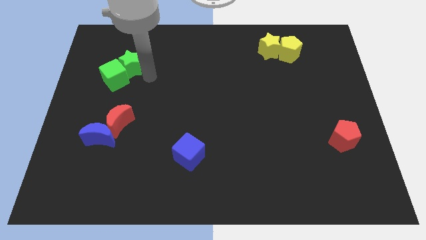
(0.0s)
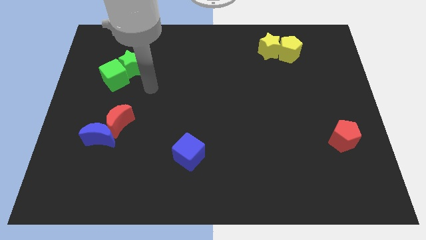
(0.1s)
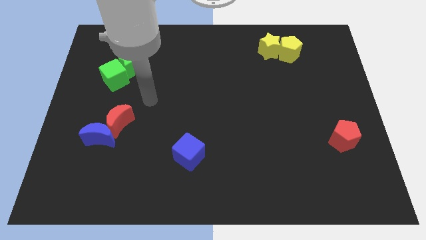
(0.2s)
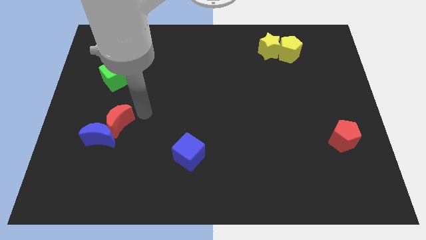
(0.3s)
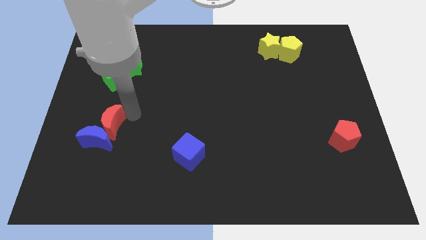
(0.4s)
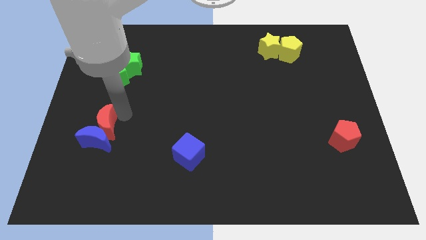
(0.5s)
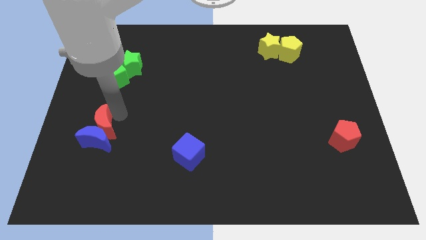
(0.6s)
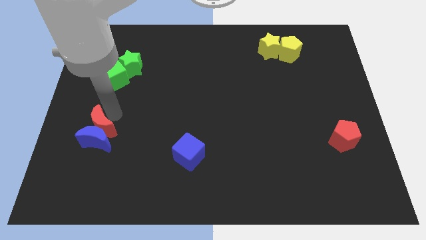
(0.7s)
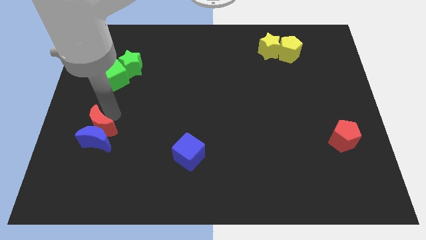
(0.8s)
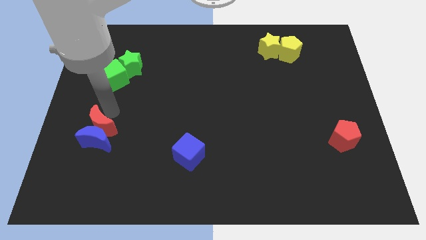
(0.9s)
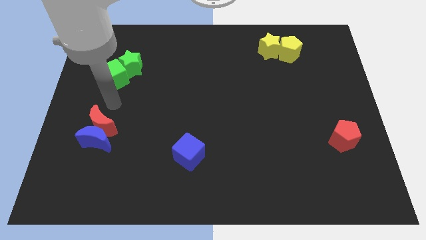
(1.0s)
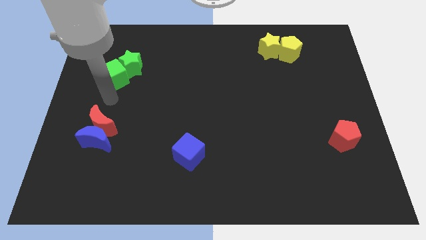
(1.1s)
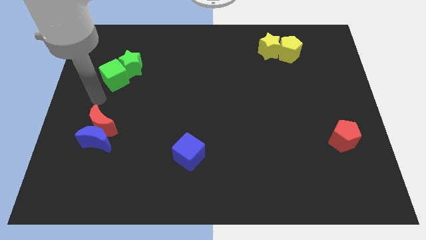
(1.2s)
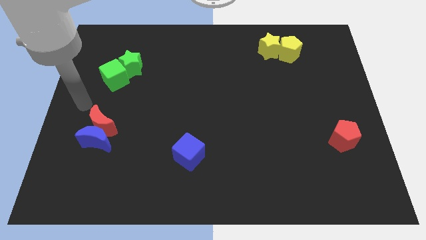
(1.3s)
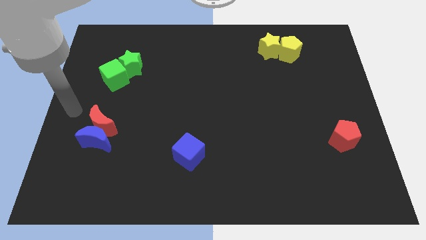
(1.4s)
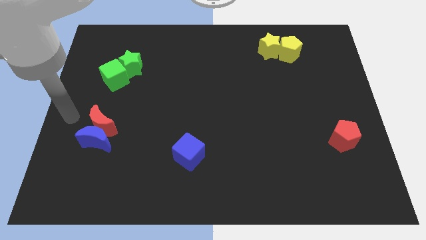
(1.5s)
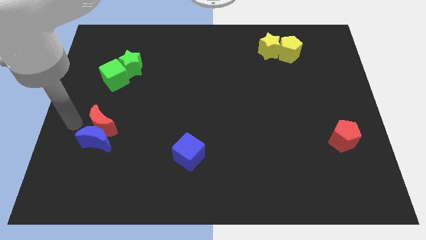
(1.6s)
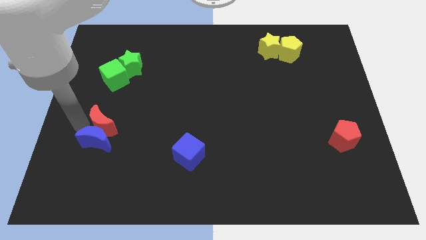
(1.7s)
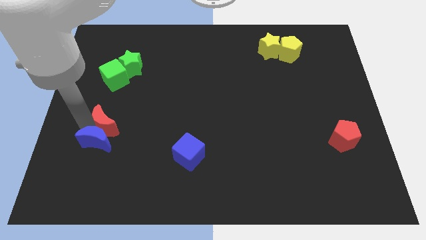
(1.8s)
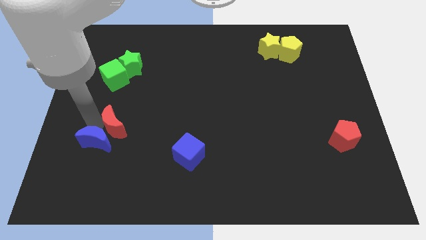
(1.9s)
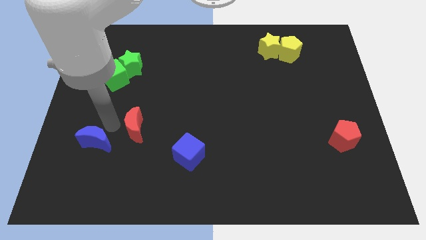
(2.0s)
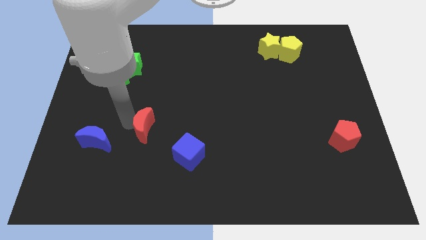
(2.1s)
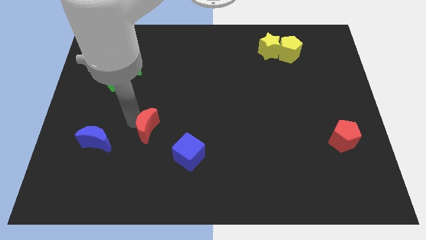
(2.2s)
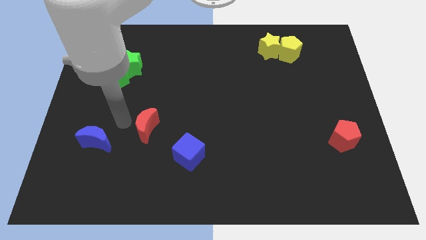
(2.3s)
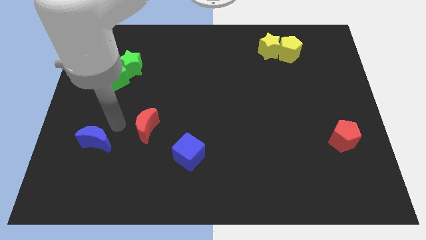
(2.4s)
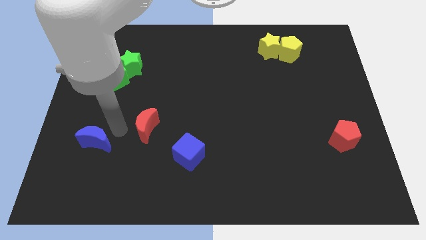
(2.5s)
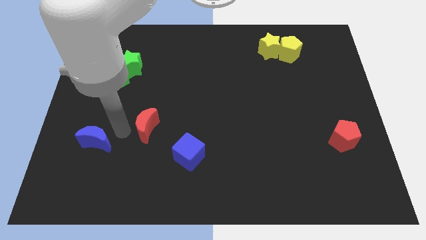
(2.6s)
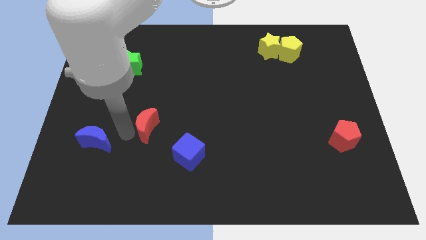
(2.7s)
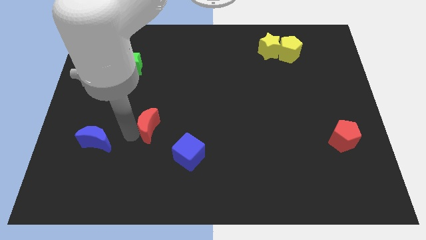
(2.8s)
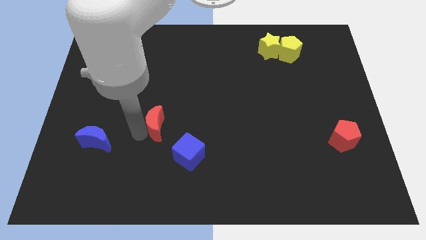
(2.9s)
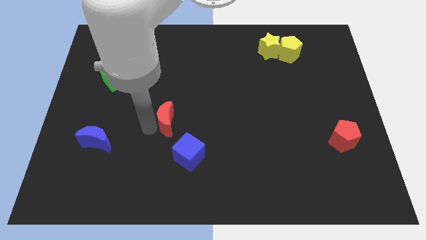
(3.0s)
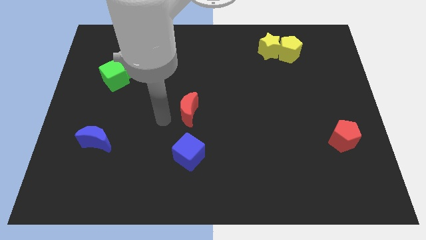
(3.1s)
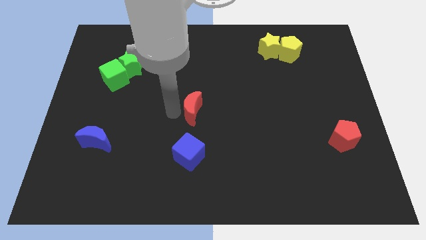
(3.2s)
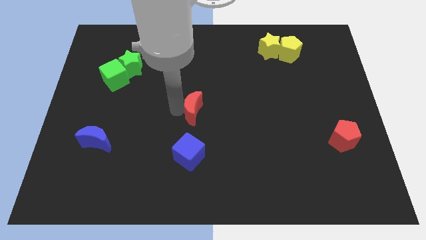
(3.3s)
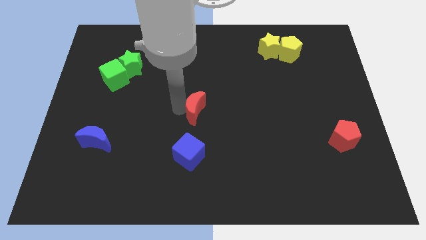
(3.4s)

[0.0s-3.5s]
move the red crescent to the top side of the blue cube

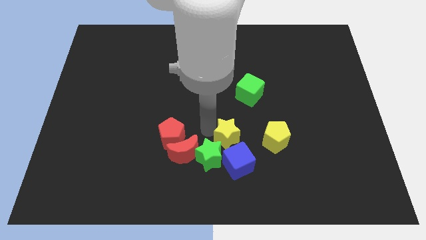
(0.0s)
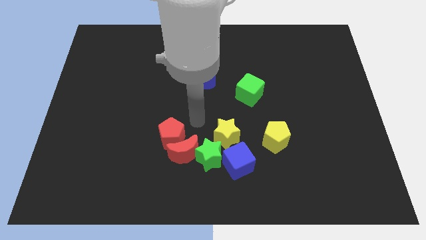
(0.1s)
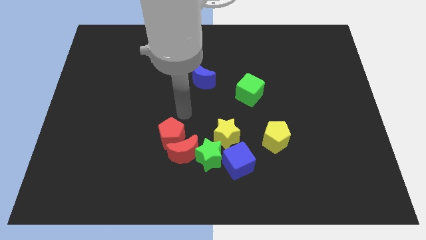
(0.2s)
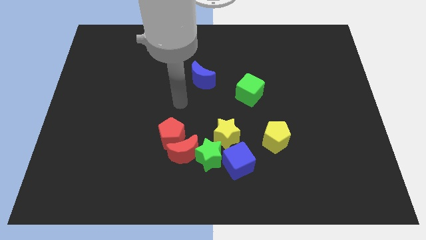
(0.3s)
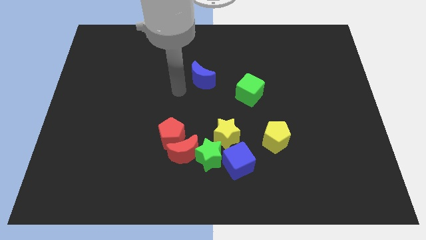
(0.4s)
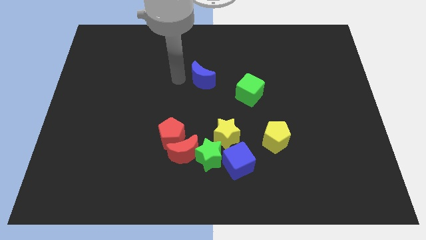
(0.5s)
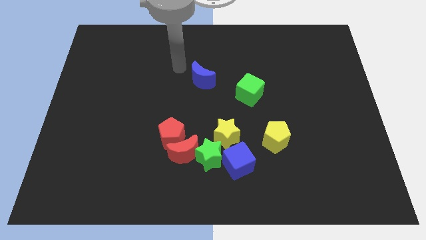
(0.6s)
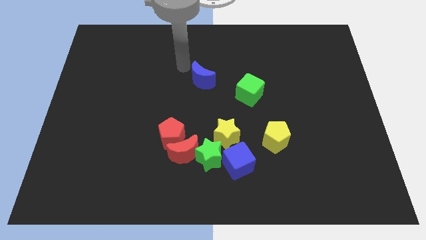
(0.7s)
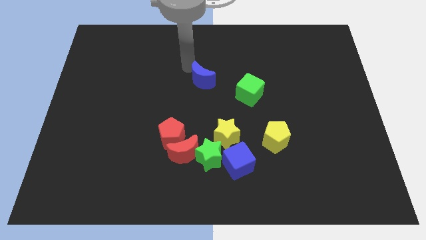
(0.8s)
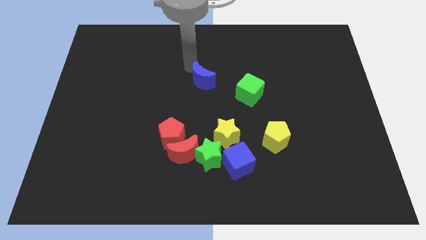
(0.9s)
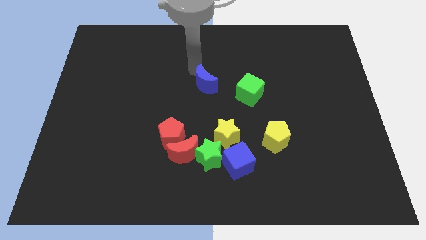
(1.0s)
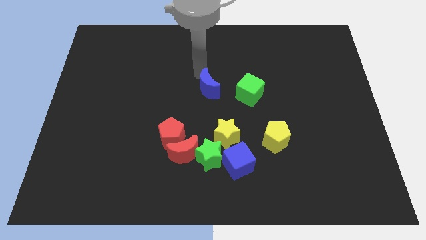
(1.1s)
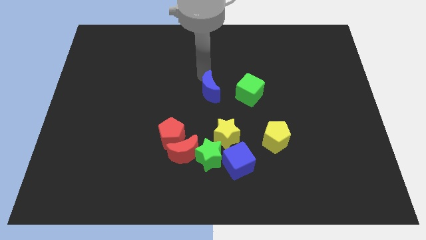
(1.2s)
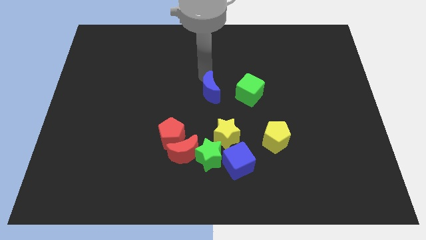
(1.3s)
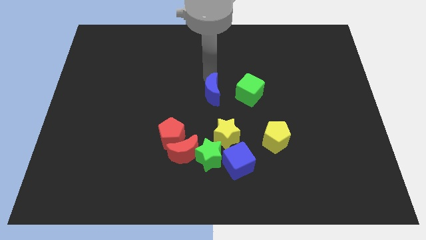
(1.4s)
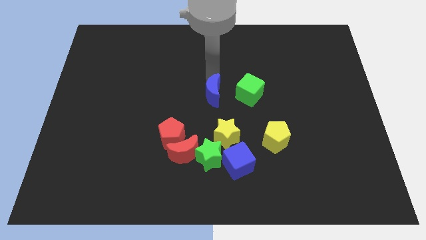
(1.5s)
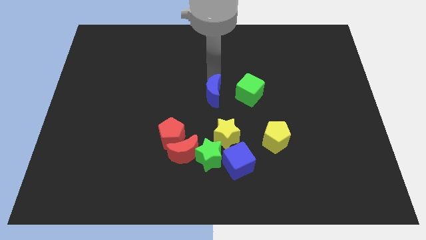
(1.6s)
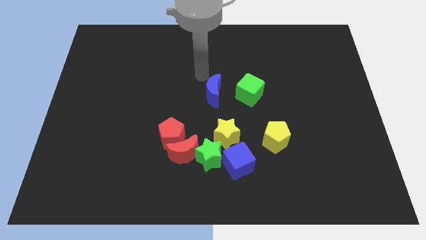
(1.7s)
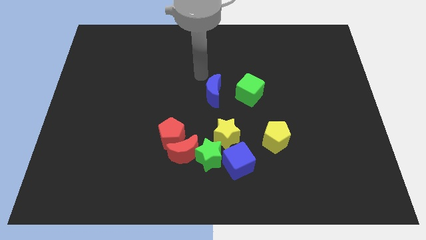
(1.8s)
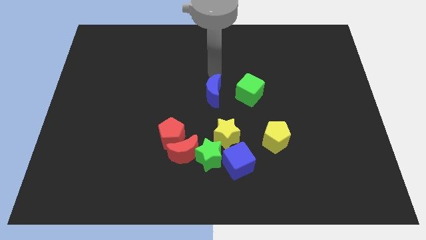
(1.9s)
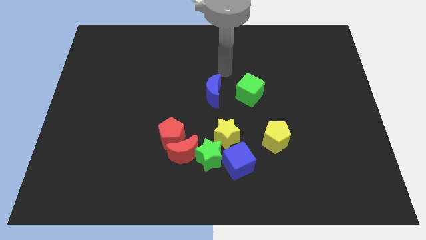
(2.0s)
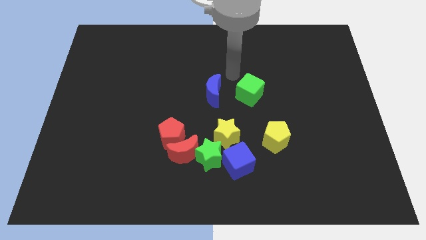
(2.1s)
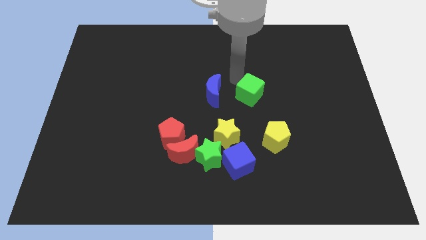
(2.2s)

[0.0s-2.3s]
push the blue crescent parallel to the left of the green cube

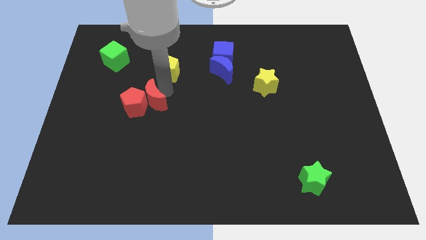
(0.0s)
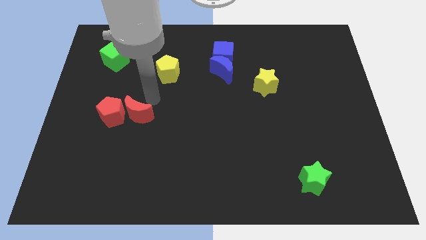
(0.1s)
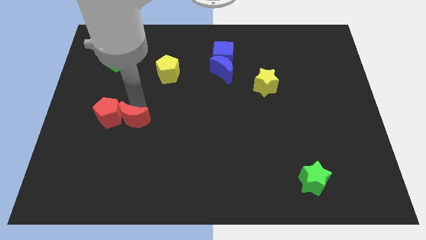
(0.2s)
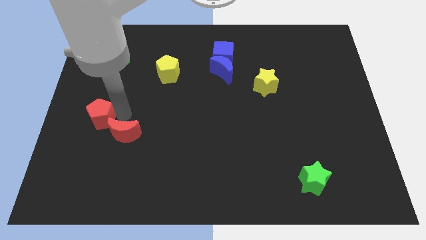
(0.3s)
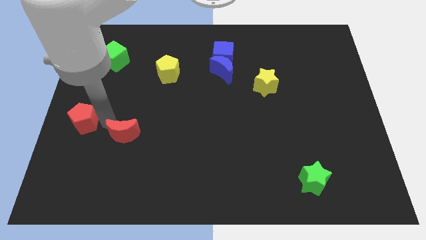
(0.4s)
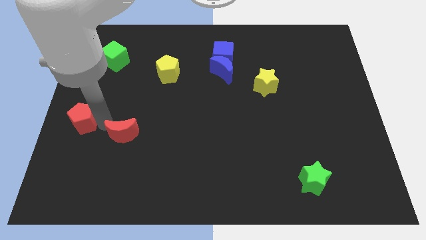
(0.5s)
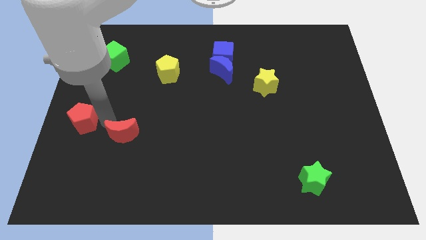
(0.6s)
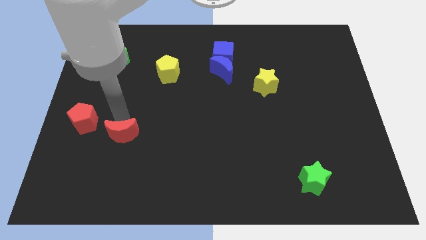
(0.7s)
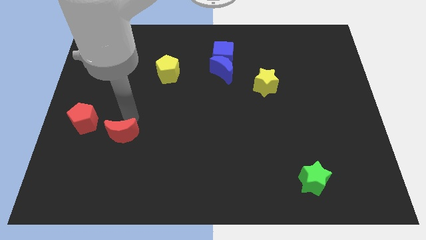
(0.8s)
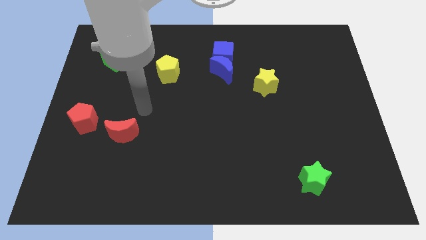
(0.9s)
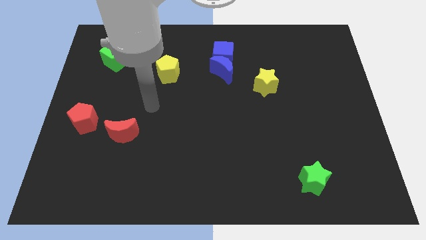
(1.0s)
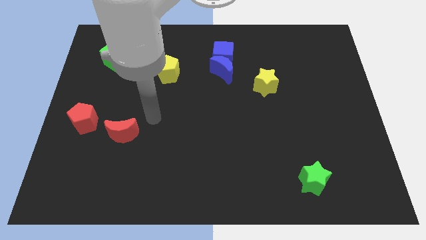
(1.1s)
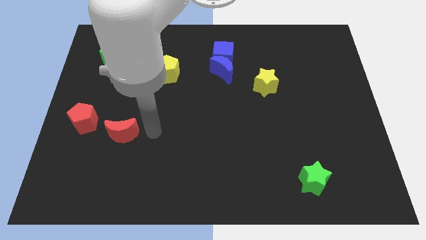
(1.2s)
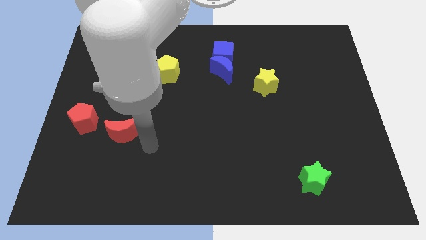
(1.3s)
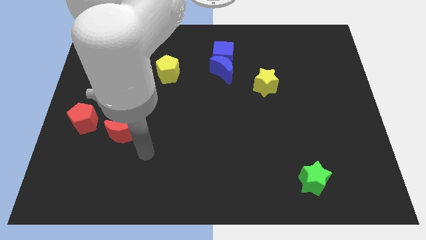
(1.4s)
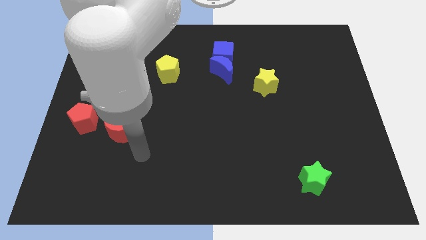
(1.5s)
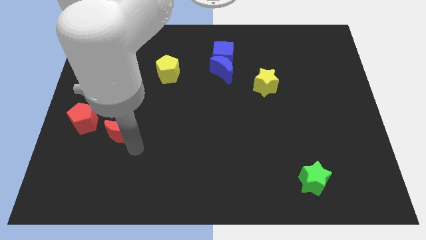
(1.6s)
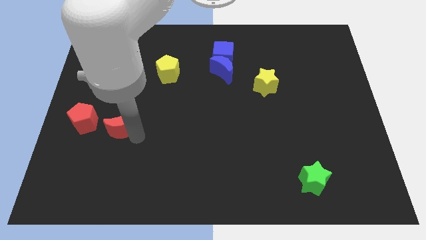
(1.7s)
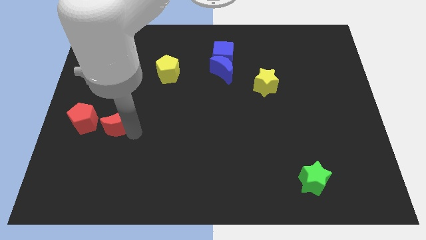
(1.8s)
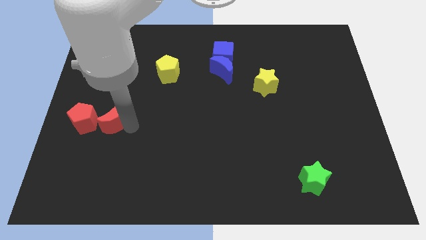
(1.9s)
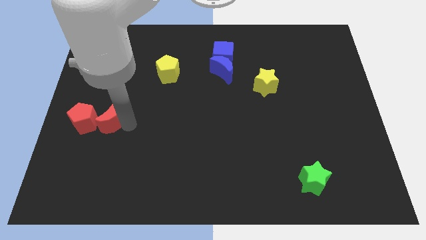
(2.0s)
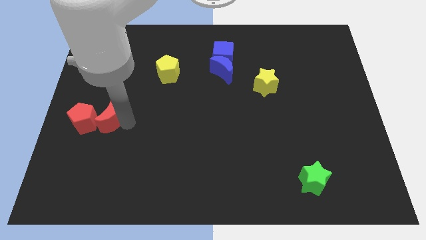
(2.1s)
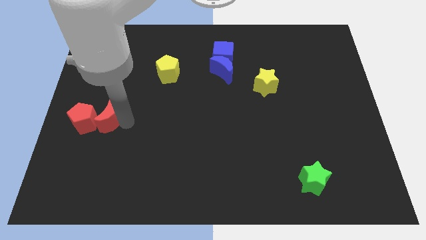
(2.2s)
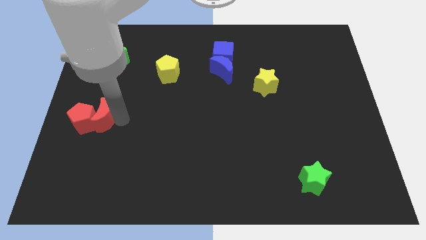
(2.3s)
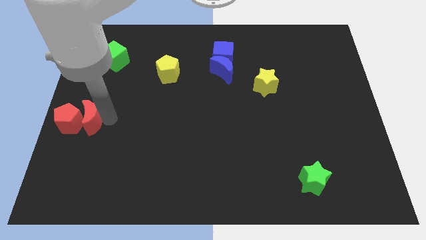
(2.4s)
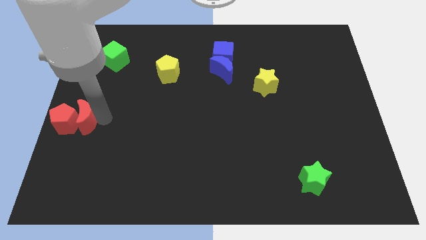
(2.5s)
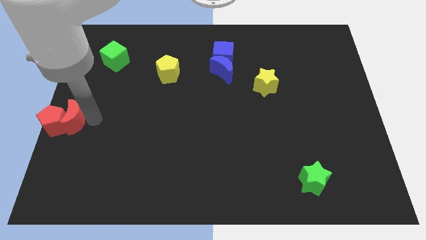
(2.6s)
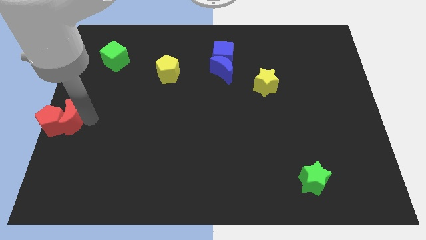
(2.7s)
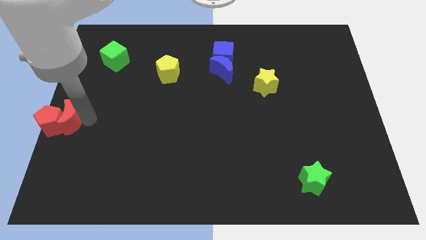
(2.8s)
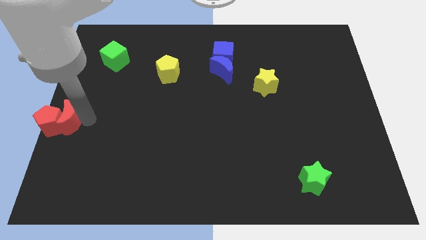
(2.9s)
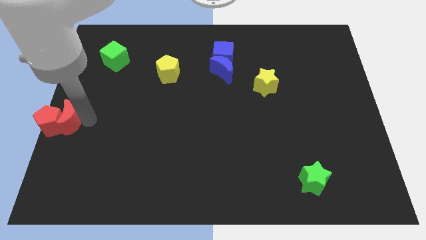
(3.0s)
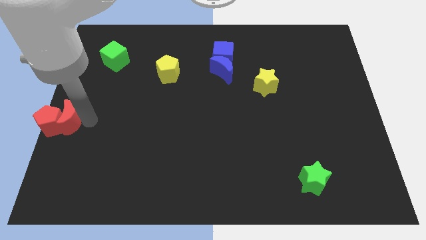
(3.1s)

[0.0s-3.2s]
put the red blocks at the left centre

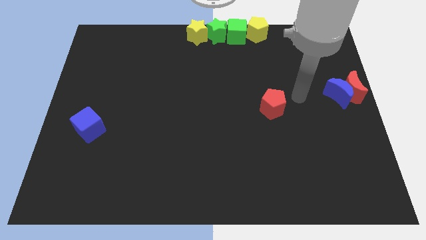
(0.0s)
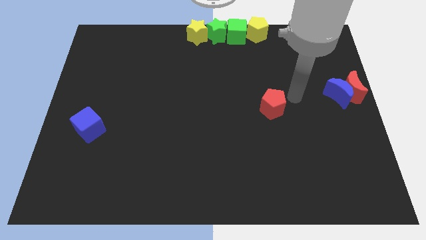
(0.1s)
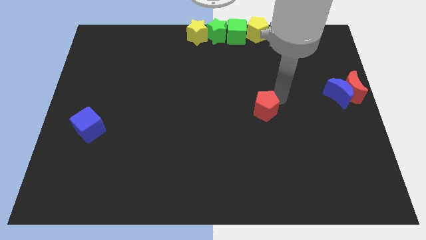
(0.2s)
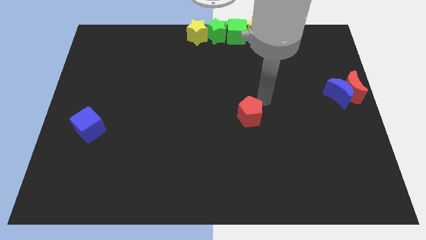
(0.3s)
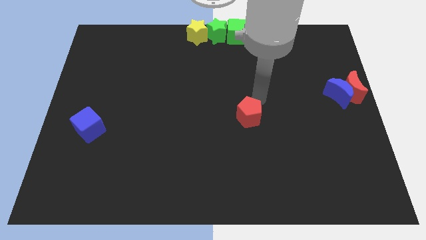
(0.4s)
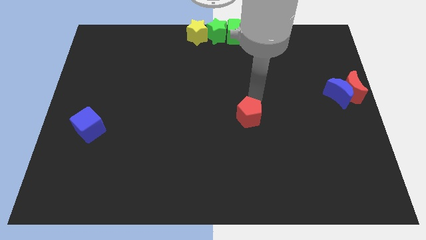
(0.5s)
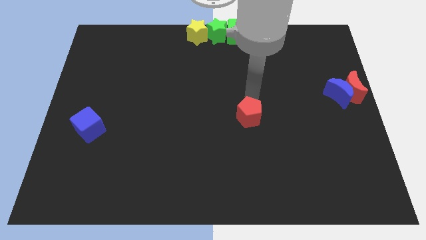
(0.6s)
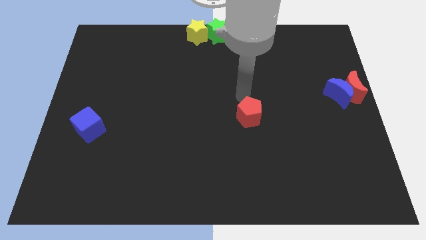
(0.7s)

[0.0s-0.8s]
push the red crescent towards the center of the board
